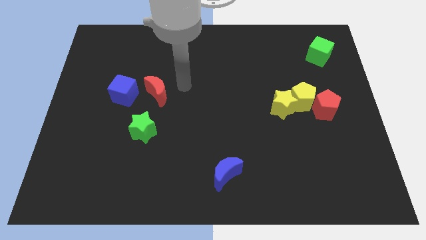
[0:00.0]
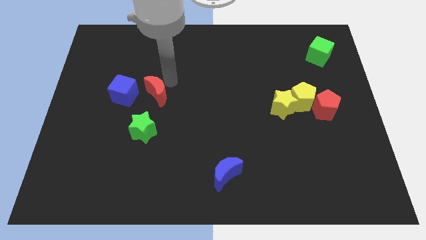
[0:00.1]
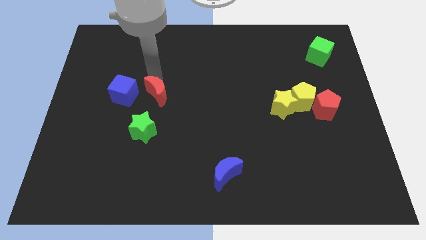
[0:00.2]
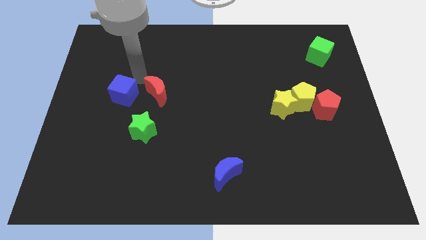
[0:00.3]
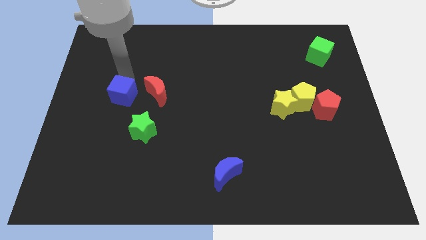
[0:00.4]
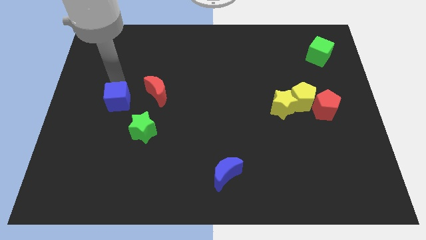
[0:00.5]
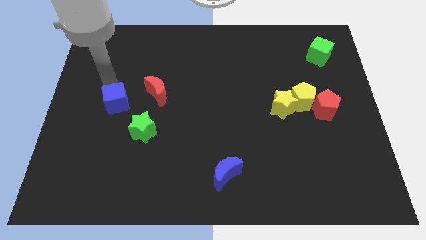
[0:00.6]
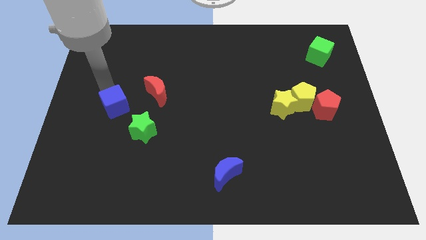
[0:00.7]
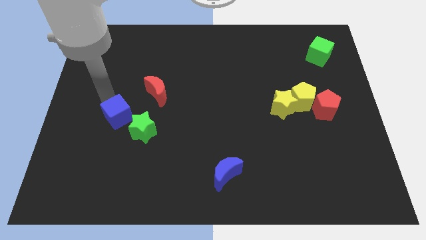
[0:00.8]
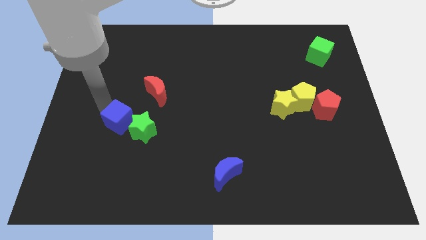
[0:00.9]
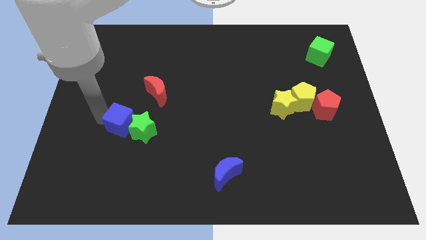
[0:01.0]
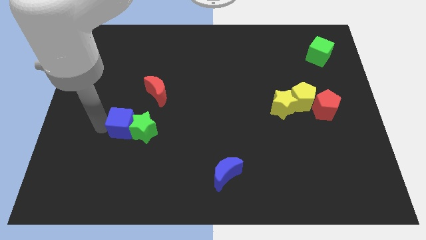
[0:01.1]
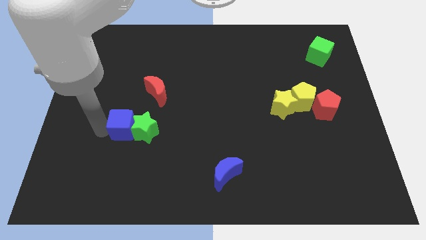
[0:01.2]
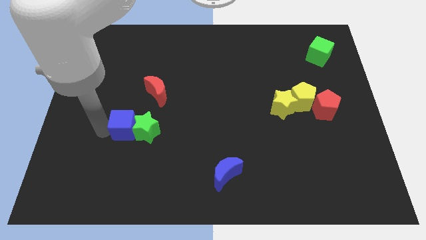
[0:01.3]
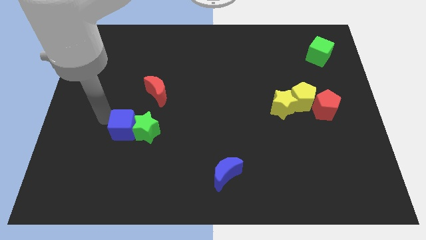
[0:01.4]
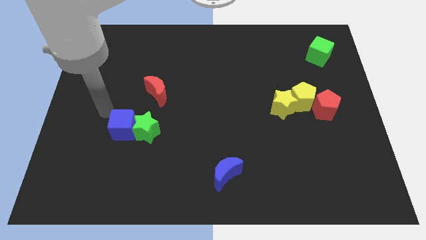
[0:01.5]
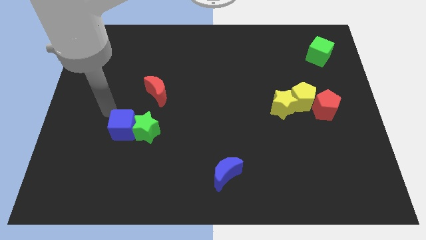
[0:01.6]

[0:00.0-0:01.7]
place the blue cube parallel left to th green star

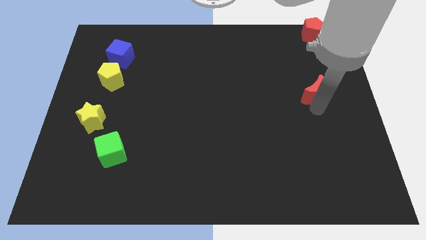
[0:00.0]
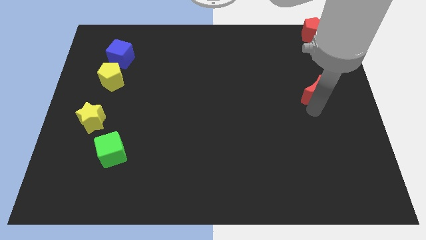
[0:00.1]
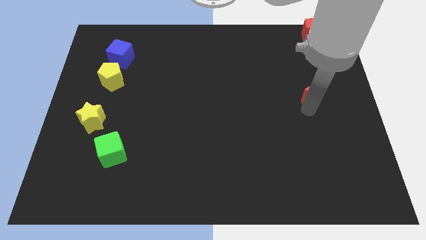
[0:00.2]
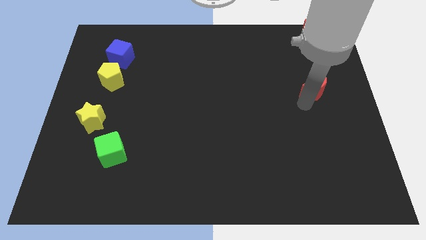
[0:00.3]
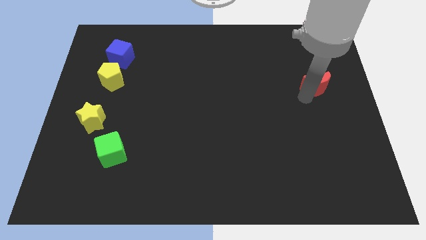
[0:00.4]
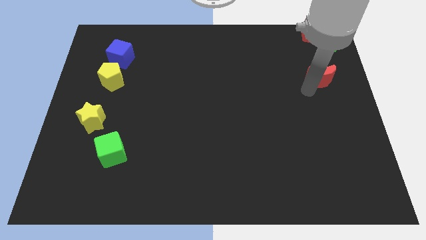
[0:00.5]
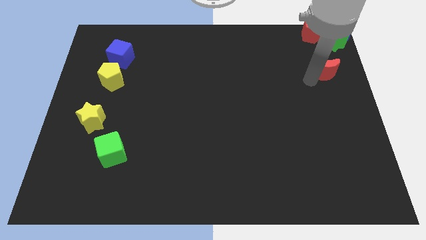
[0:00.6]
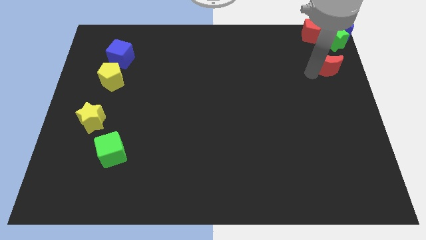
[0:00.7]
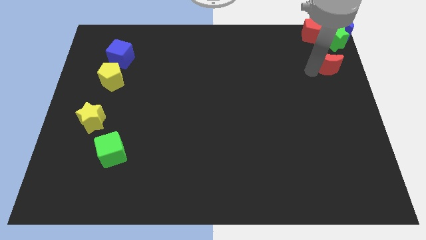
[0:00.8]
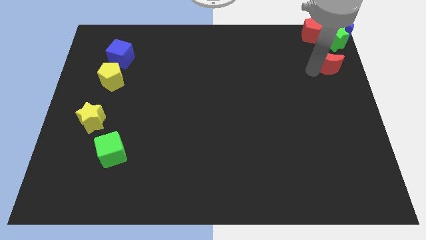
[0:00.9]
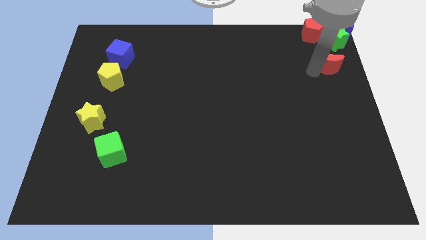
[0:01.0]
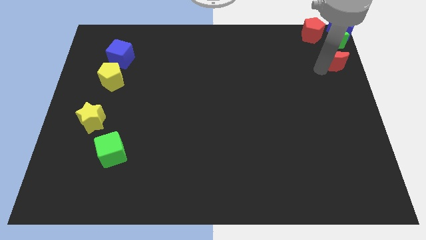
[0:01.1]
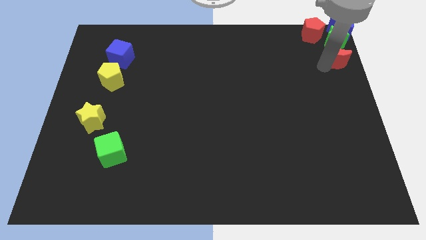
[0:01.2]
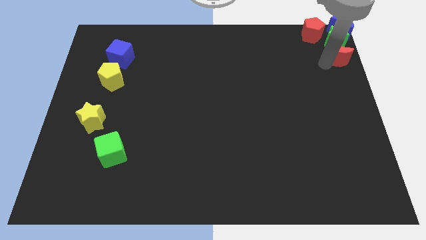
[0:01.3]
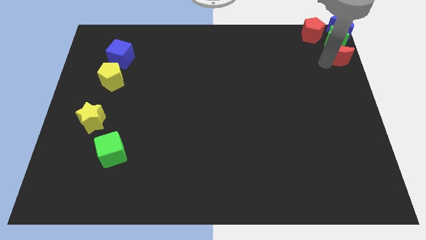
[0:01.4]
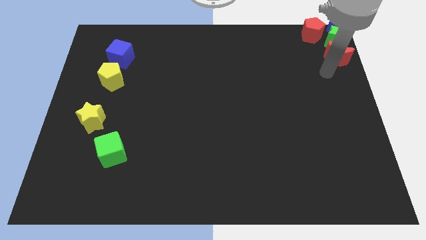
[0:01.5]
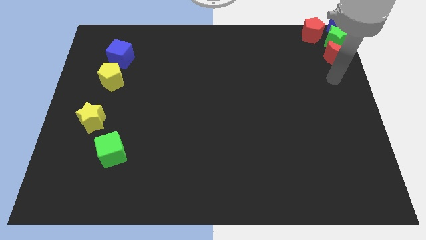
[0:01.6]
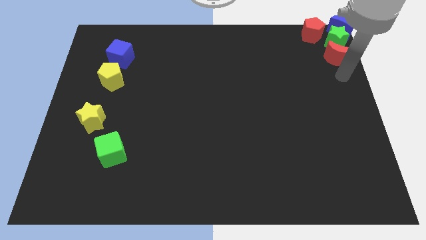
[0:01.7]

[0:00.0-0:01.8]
put the red crescent vertically below the green star

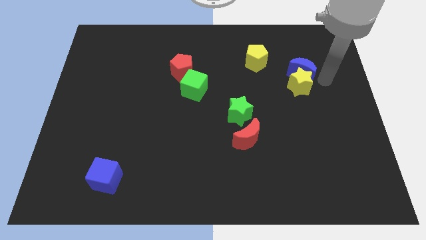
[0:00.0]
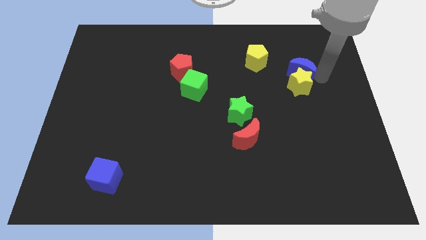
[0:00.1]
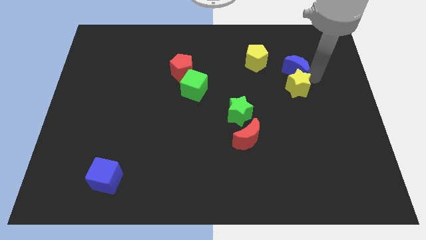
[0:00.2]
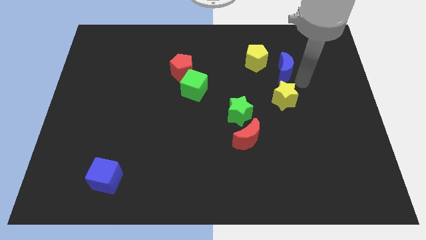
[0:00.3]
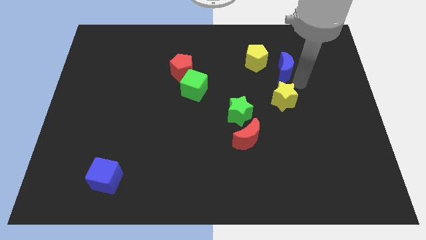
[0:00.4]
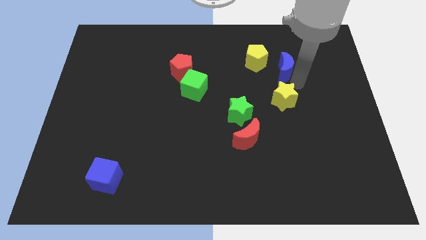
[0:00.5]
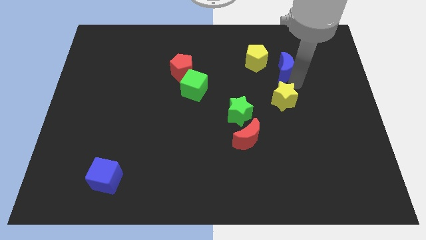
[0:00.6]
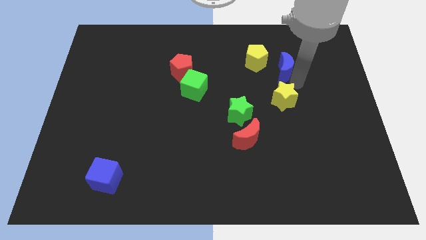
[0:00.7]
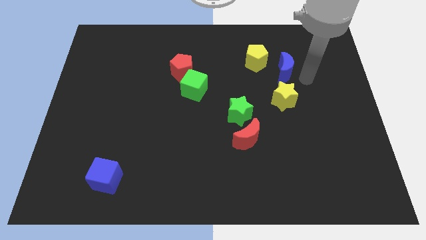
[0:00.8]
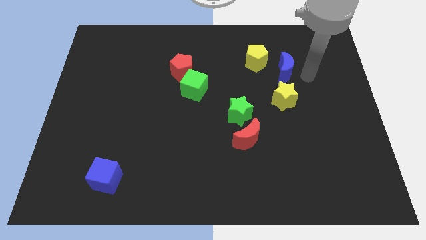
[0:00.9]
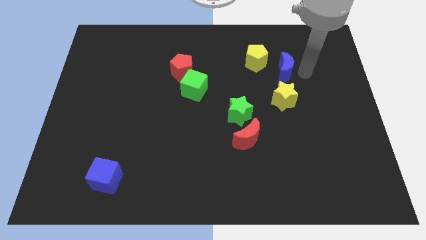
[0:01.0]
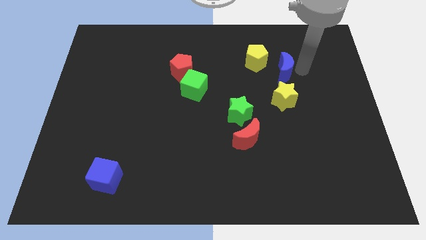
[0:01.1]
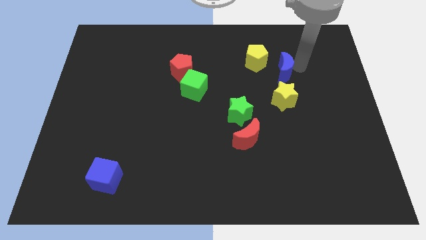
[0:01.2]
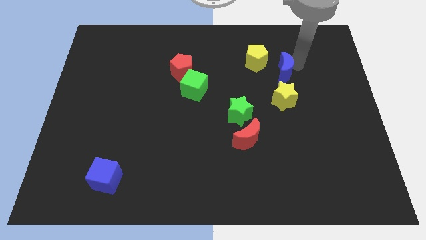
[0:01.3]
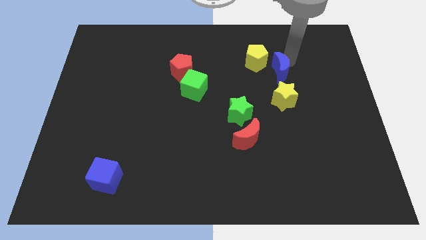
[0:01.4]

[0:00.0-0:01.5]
slightly push the blue moon and yellow star to the left

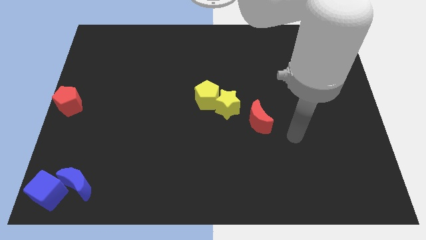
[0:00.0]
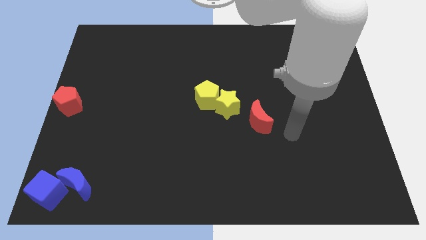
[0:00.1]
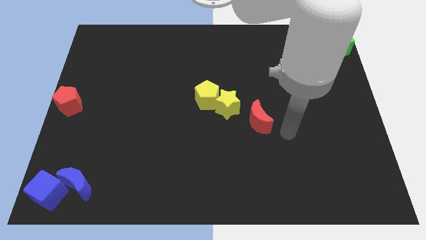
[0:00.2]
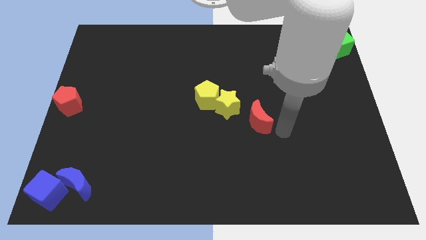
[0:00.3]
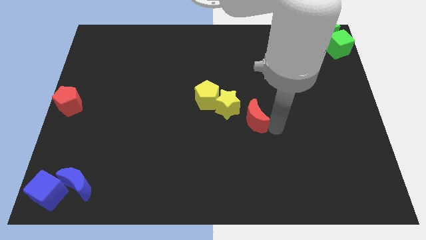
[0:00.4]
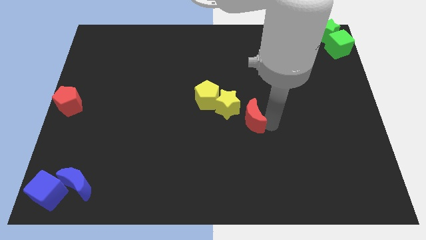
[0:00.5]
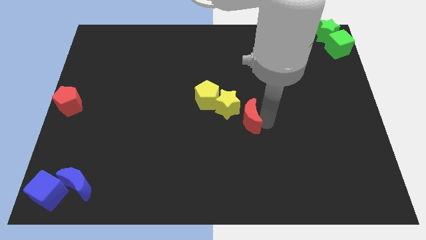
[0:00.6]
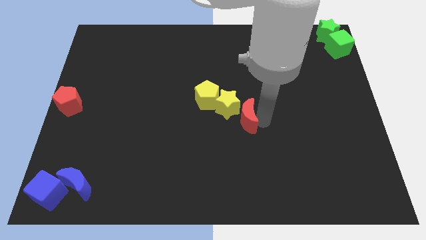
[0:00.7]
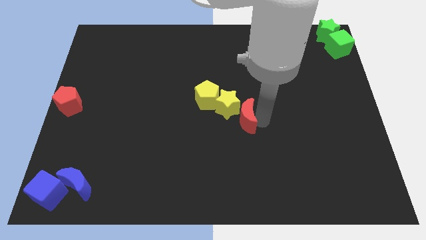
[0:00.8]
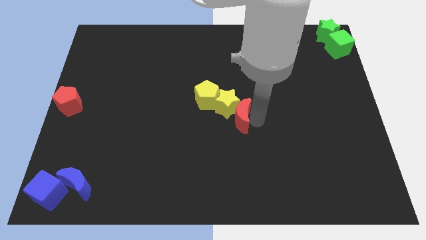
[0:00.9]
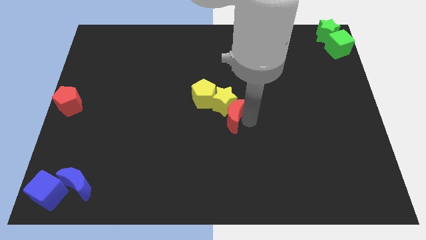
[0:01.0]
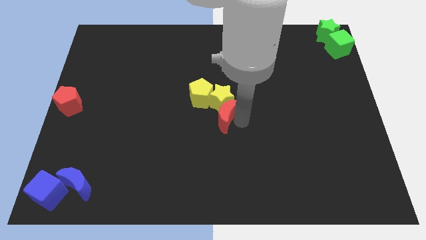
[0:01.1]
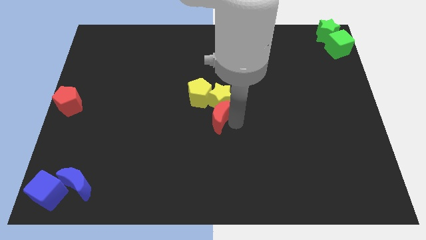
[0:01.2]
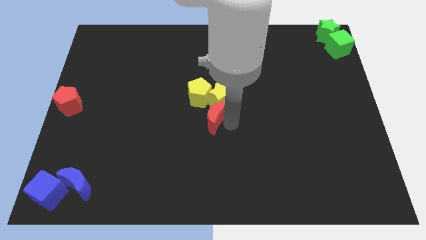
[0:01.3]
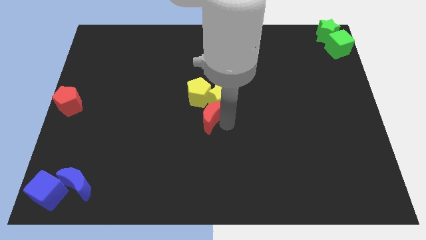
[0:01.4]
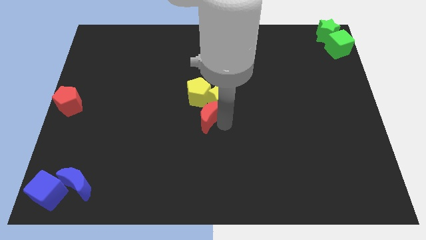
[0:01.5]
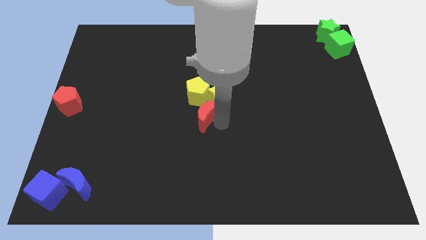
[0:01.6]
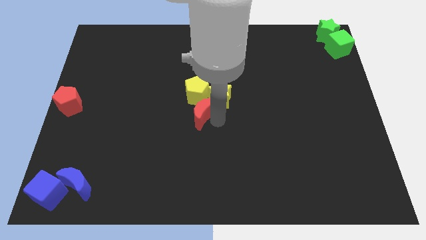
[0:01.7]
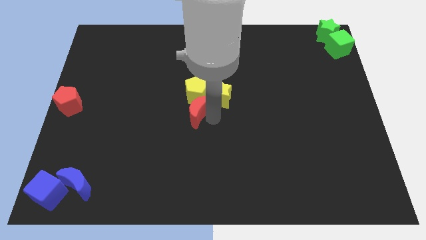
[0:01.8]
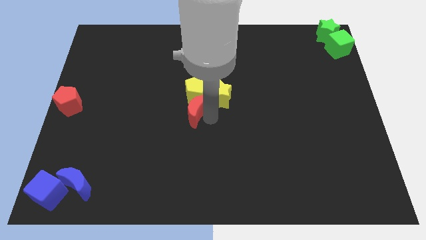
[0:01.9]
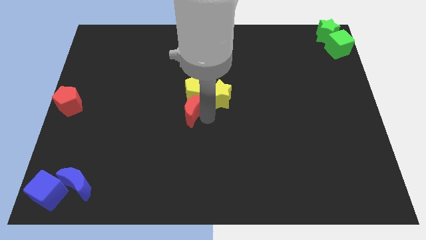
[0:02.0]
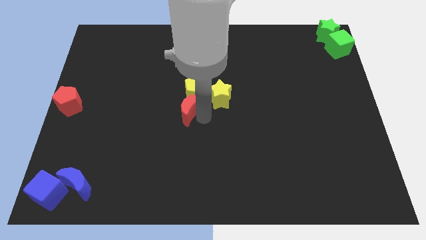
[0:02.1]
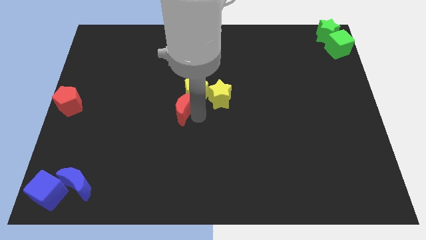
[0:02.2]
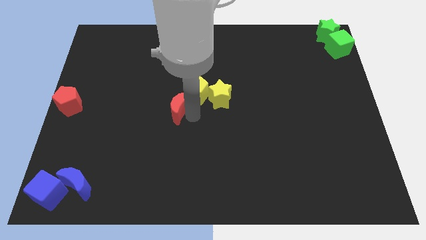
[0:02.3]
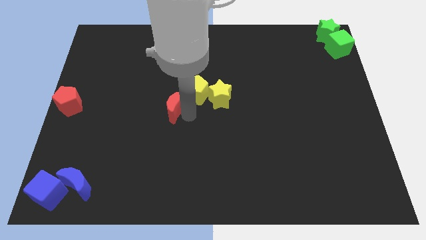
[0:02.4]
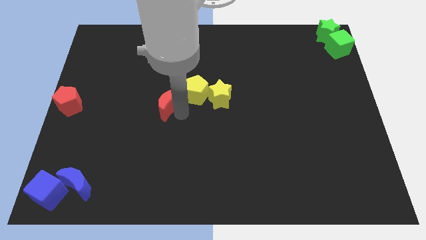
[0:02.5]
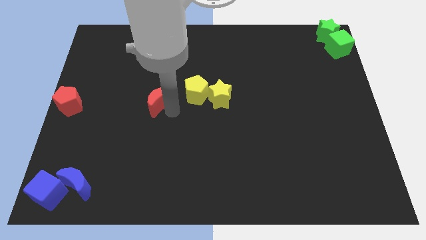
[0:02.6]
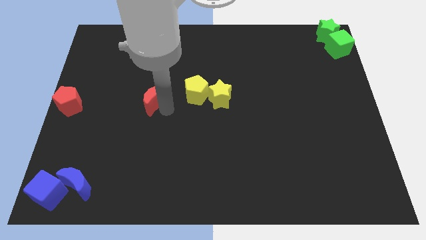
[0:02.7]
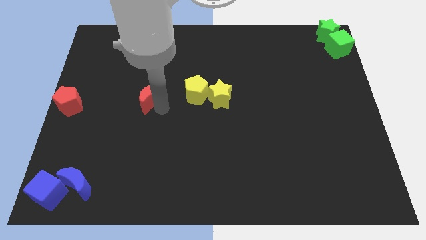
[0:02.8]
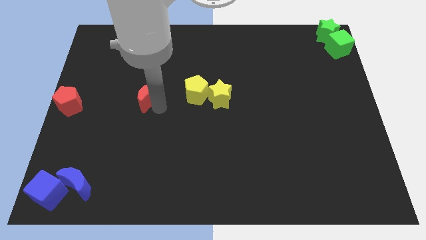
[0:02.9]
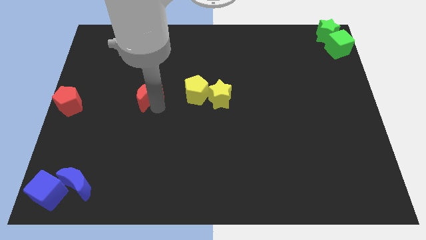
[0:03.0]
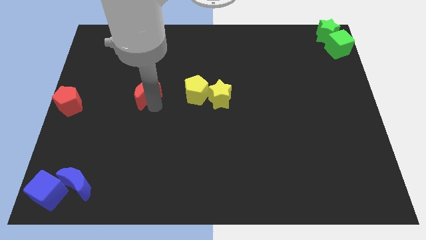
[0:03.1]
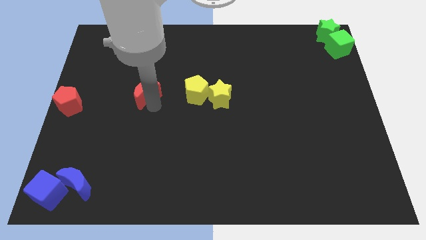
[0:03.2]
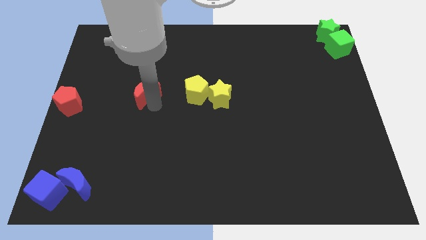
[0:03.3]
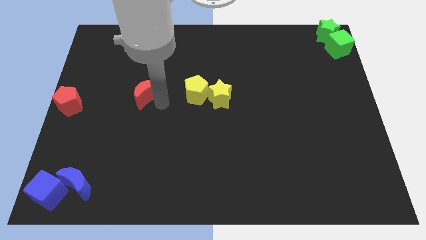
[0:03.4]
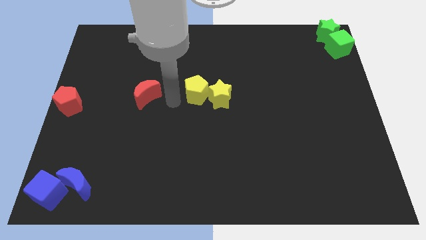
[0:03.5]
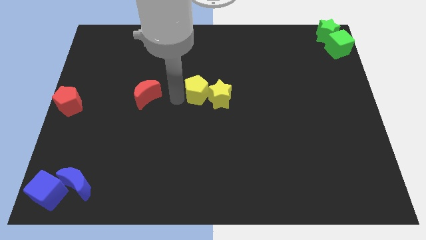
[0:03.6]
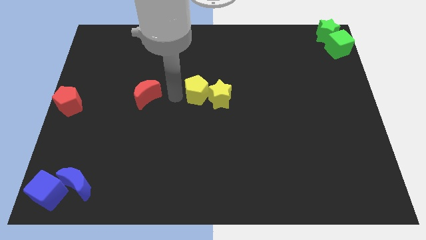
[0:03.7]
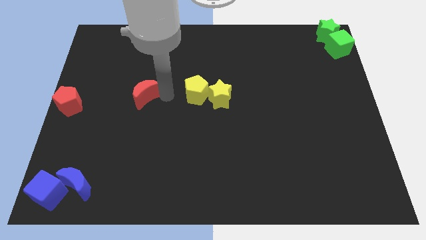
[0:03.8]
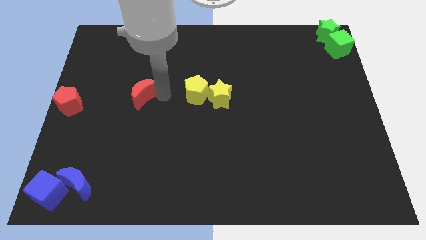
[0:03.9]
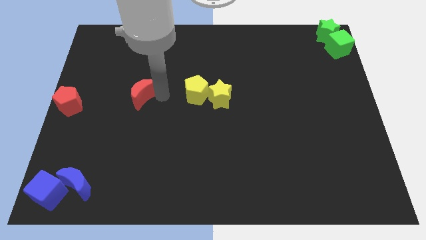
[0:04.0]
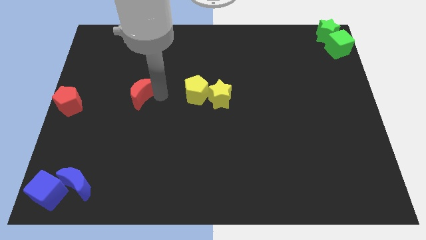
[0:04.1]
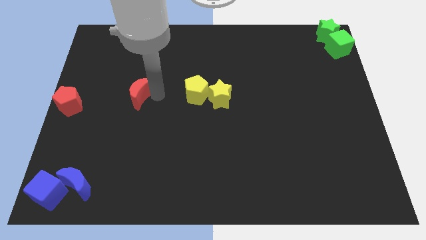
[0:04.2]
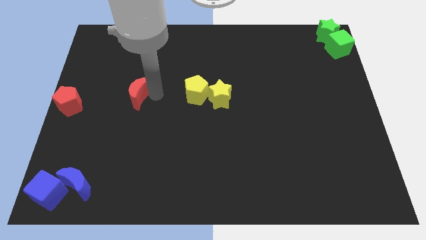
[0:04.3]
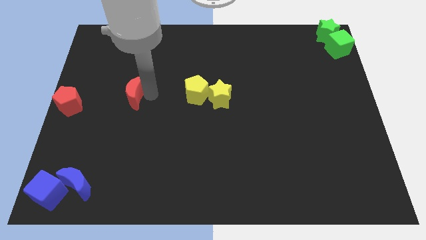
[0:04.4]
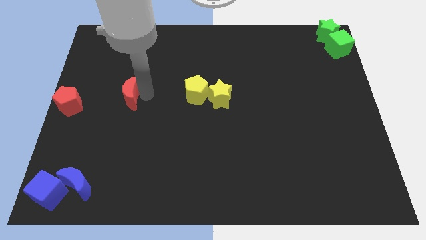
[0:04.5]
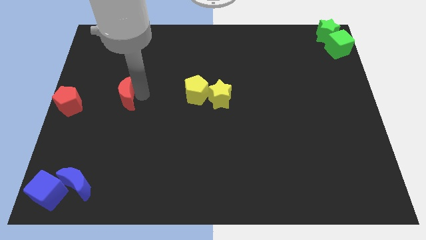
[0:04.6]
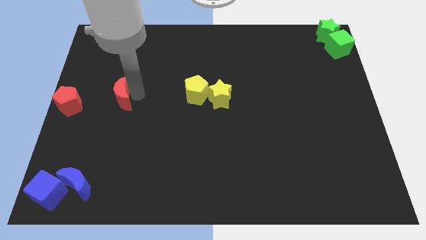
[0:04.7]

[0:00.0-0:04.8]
move the red crescent towards the red pentagon
